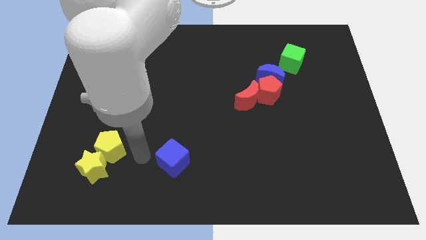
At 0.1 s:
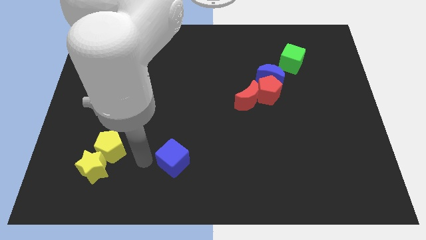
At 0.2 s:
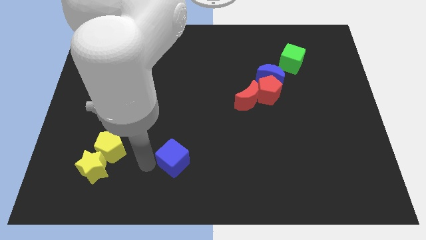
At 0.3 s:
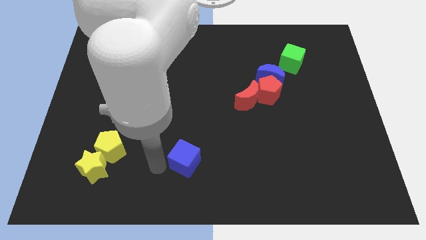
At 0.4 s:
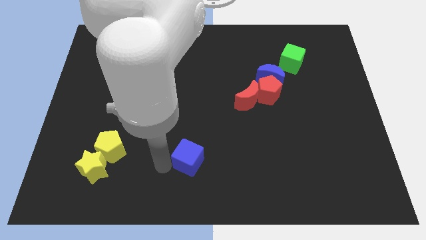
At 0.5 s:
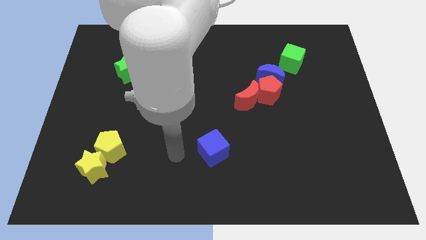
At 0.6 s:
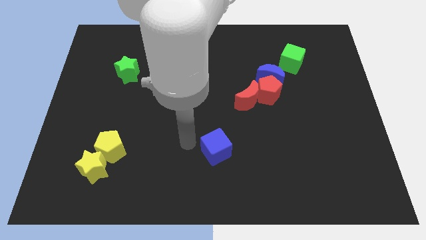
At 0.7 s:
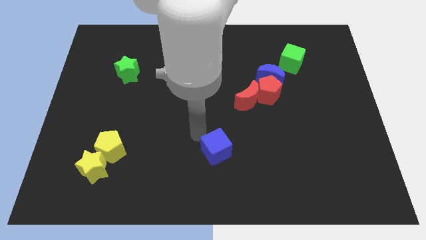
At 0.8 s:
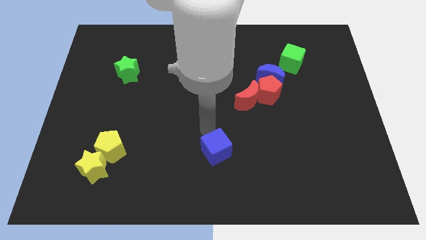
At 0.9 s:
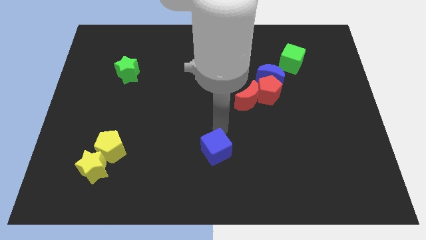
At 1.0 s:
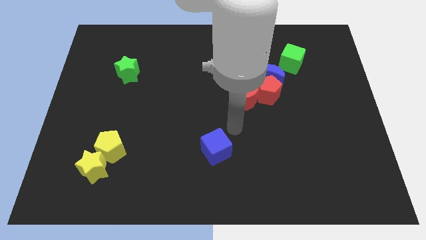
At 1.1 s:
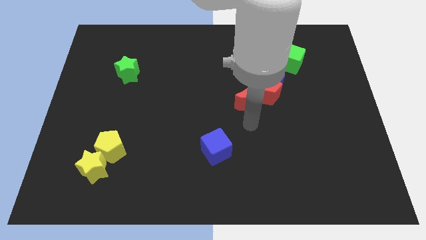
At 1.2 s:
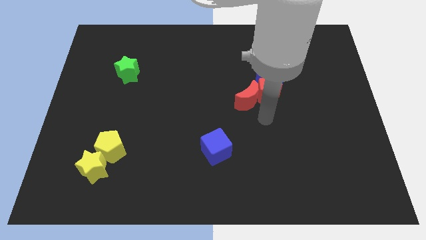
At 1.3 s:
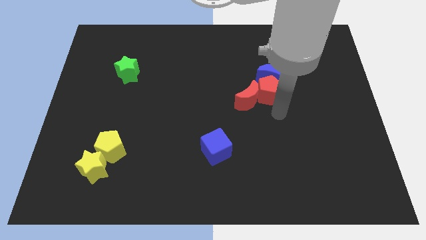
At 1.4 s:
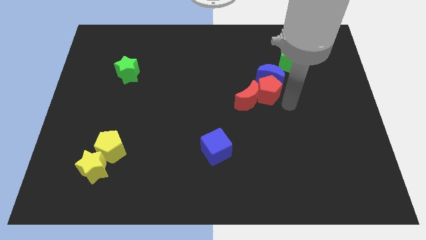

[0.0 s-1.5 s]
move the blue cube towards the red blocks

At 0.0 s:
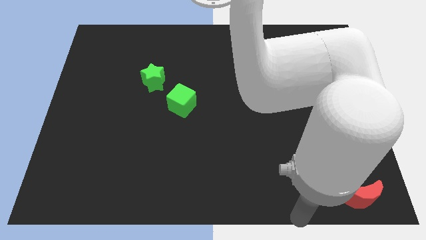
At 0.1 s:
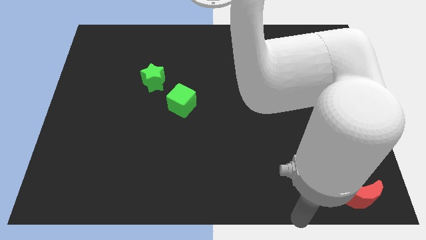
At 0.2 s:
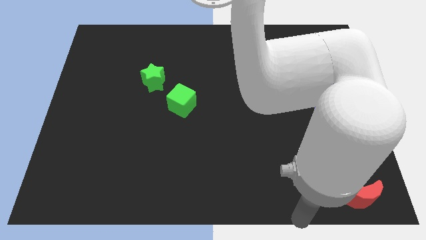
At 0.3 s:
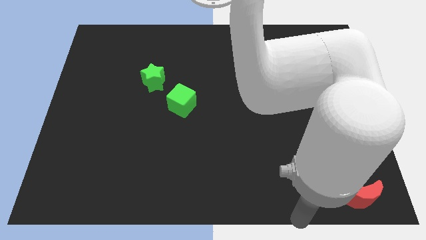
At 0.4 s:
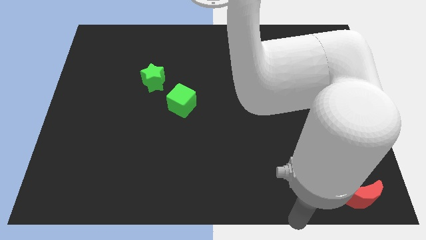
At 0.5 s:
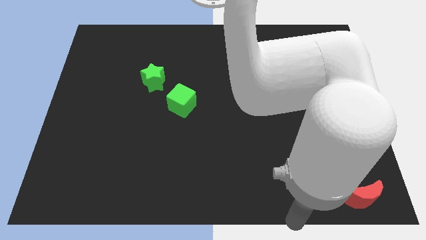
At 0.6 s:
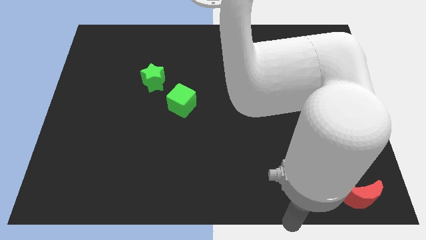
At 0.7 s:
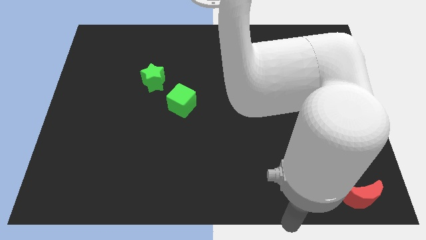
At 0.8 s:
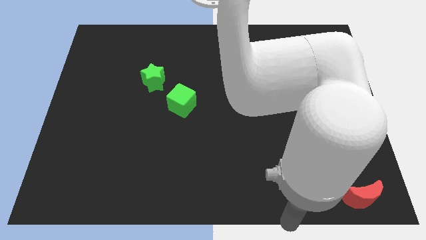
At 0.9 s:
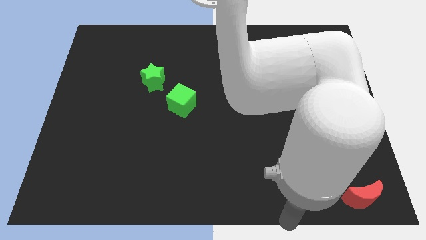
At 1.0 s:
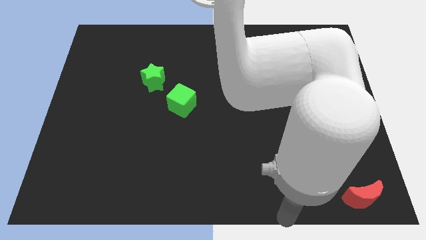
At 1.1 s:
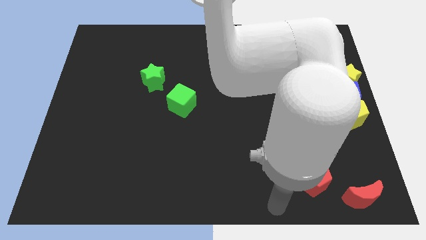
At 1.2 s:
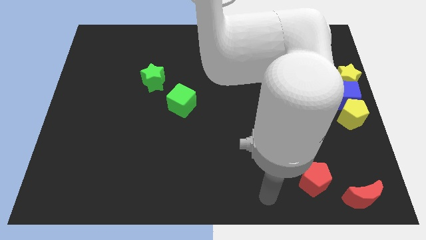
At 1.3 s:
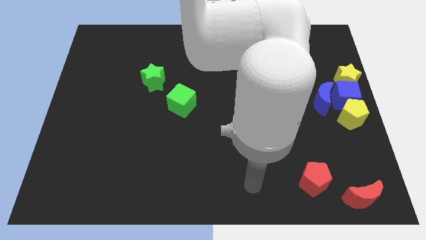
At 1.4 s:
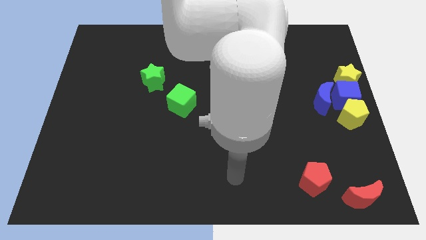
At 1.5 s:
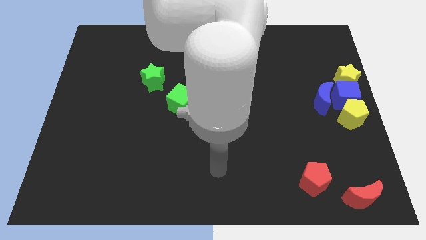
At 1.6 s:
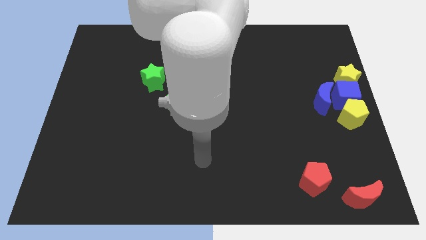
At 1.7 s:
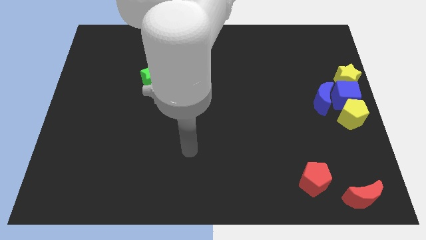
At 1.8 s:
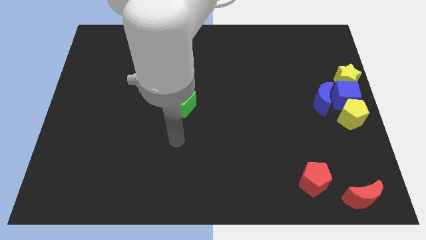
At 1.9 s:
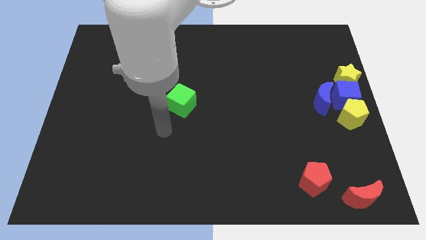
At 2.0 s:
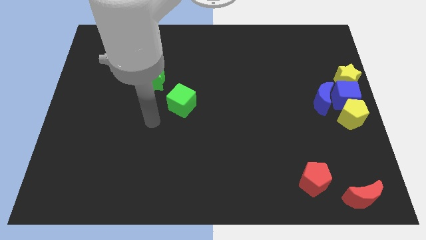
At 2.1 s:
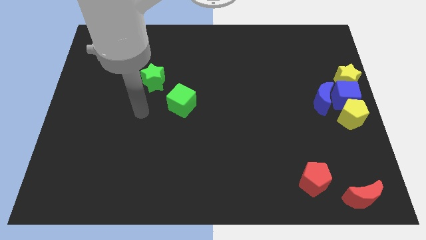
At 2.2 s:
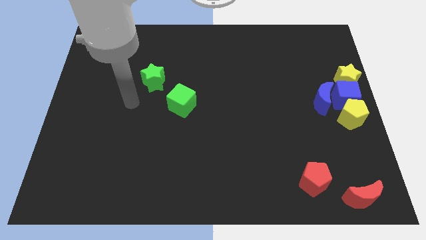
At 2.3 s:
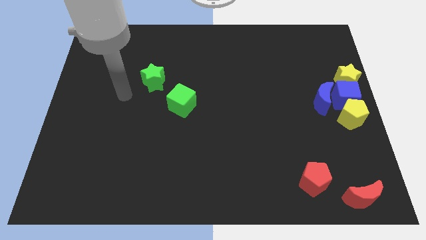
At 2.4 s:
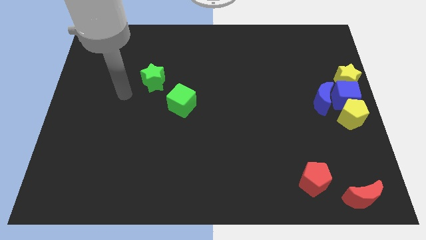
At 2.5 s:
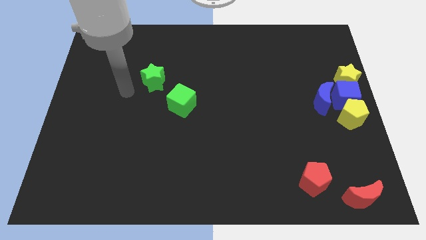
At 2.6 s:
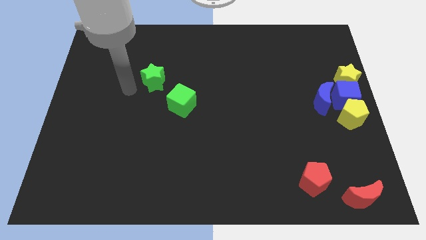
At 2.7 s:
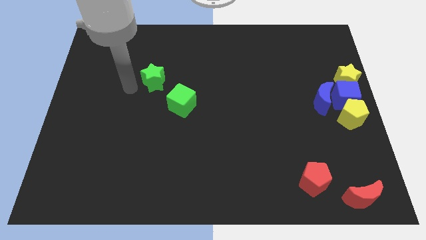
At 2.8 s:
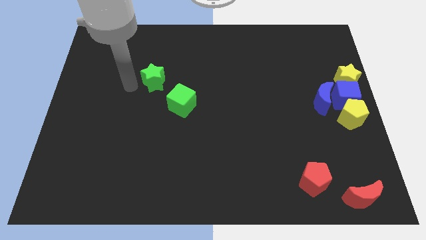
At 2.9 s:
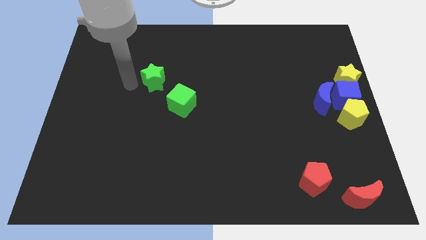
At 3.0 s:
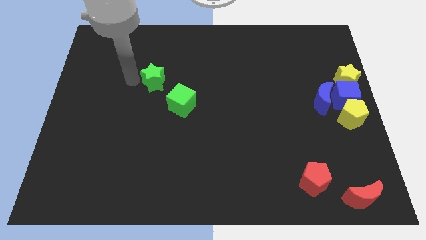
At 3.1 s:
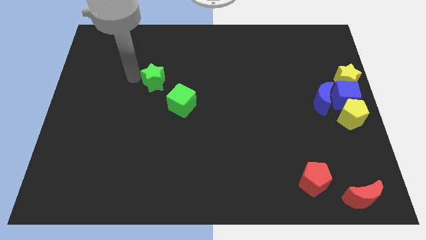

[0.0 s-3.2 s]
point your hand at the left side of the green star

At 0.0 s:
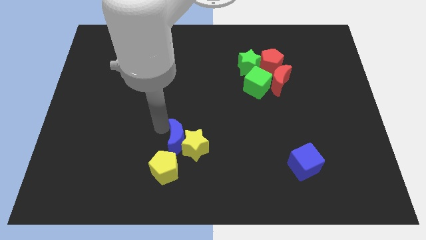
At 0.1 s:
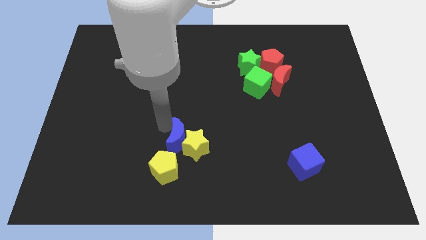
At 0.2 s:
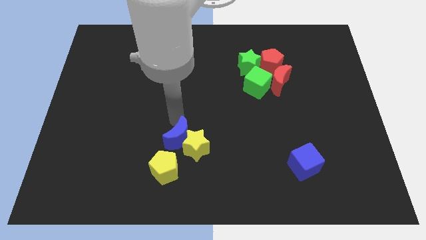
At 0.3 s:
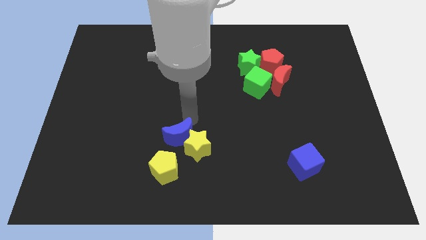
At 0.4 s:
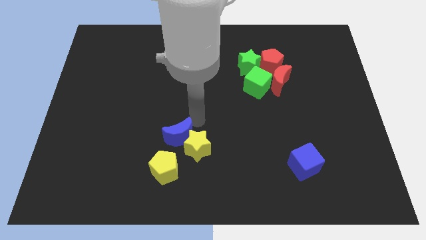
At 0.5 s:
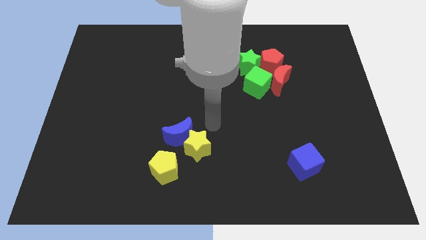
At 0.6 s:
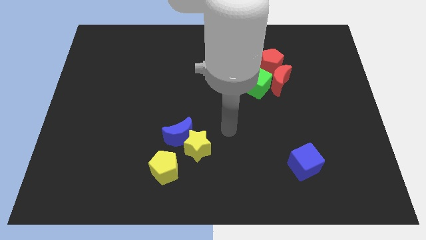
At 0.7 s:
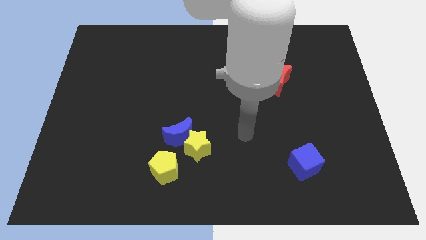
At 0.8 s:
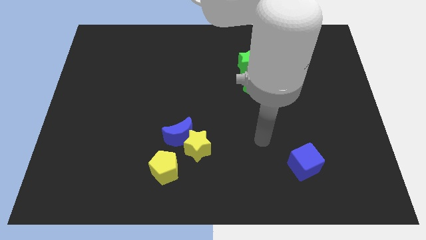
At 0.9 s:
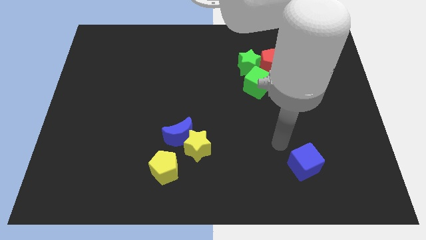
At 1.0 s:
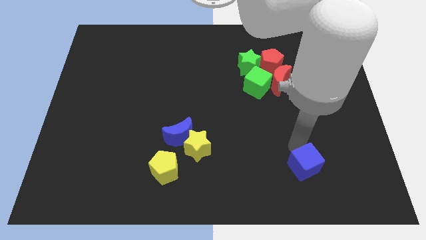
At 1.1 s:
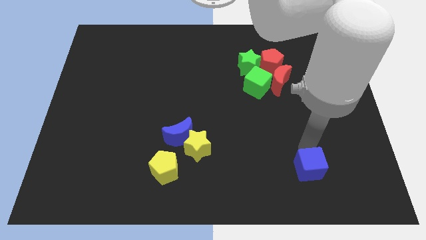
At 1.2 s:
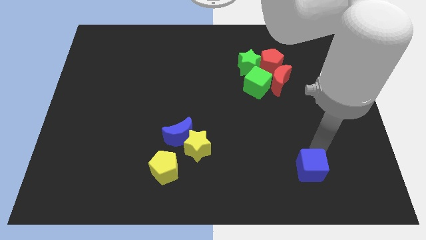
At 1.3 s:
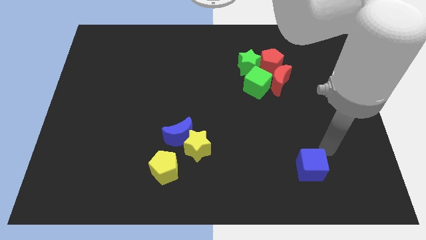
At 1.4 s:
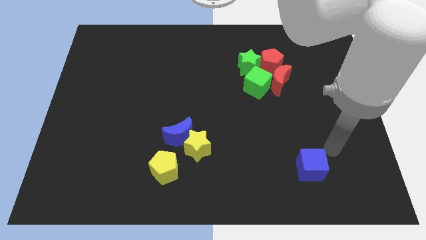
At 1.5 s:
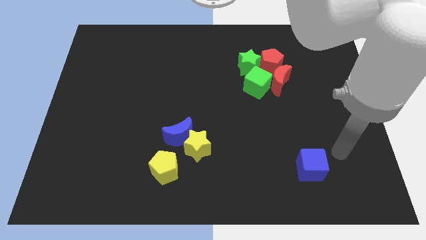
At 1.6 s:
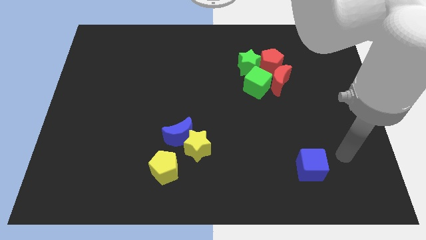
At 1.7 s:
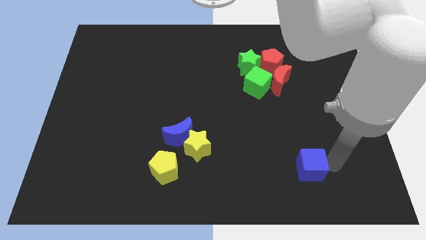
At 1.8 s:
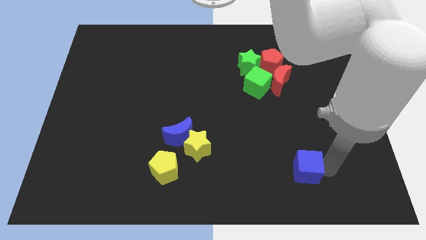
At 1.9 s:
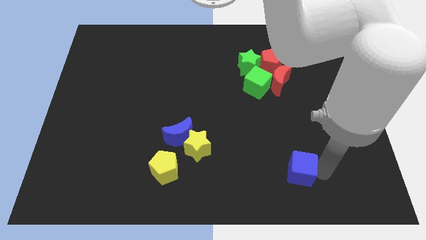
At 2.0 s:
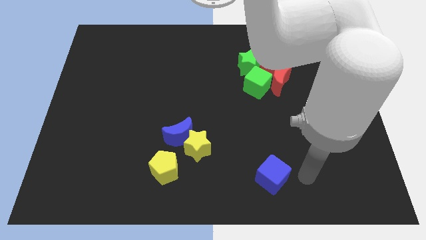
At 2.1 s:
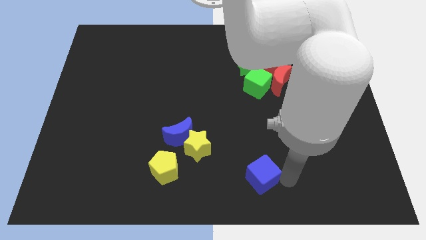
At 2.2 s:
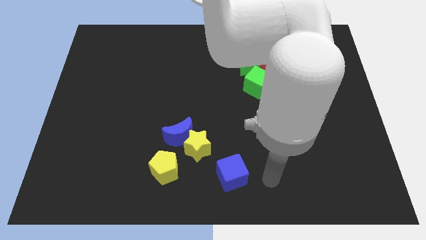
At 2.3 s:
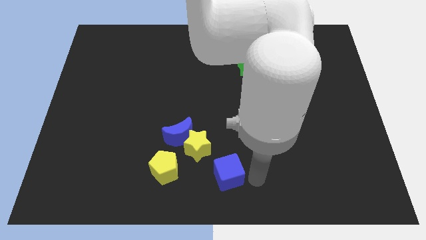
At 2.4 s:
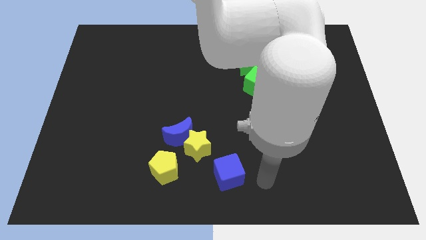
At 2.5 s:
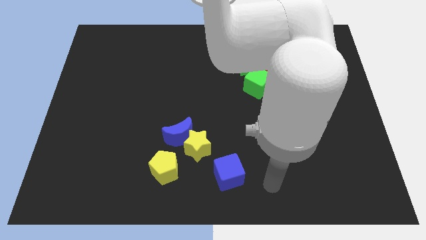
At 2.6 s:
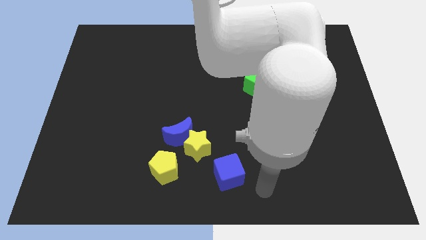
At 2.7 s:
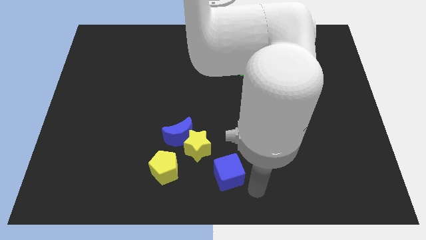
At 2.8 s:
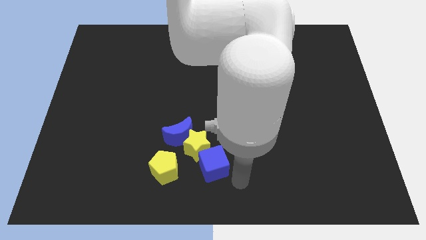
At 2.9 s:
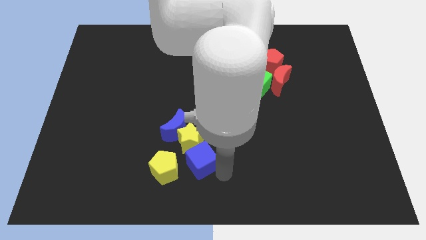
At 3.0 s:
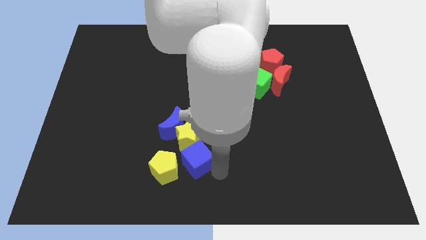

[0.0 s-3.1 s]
slide blue blocks into yellow star

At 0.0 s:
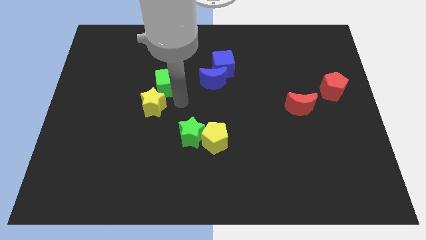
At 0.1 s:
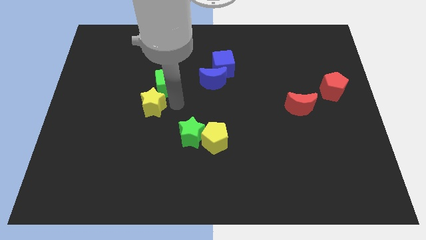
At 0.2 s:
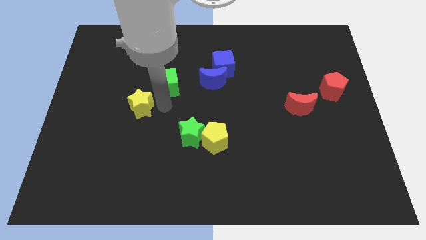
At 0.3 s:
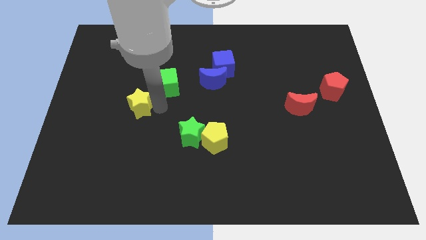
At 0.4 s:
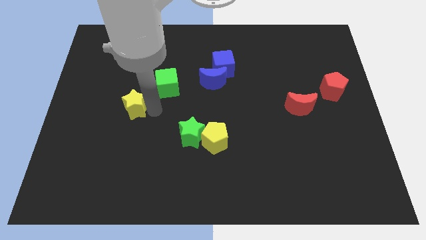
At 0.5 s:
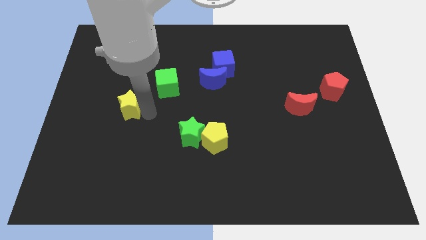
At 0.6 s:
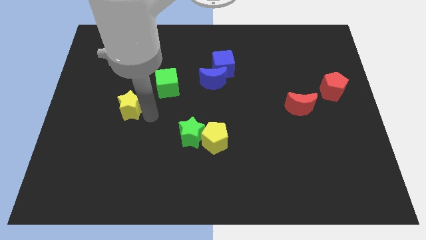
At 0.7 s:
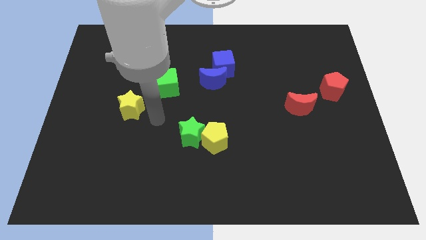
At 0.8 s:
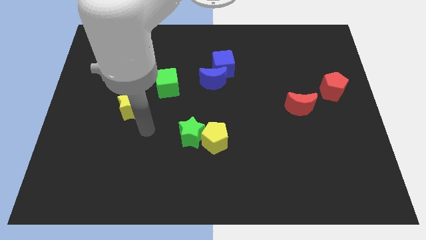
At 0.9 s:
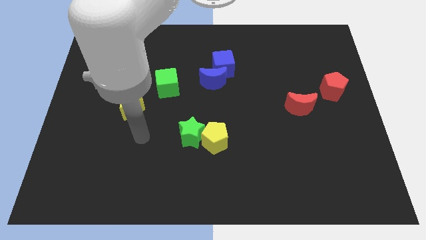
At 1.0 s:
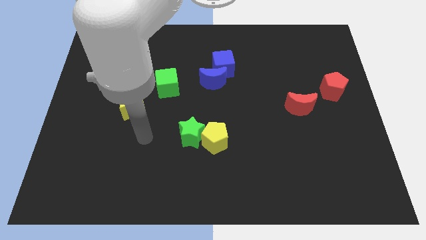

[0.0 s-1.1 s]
slightly move the yellow star towards the left side of the green cube
